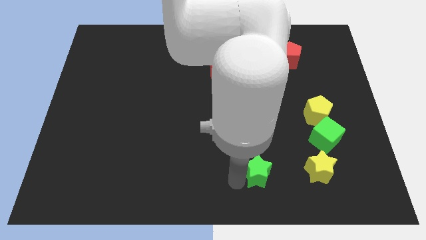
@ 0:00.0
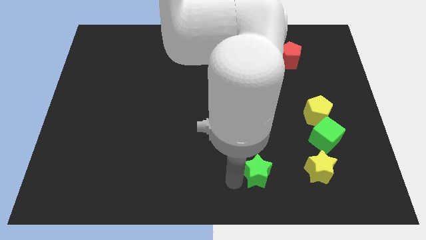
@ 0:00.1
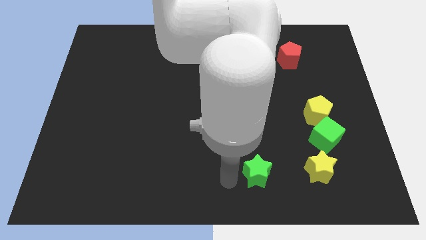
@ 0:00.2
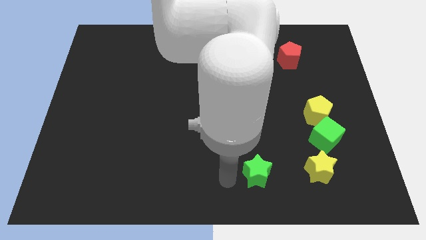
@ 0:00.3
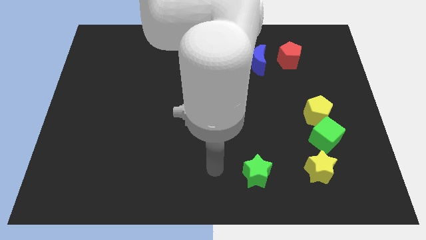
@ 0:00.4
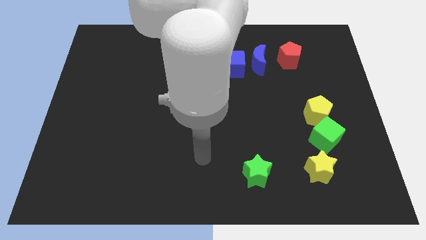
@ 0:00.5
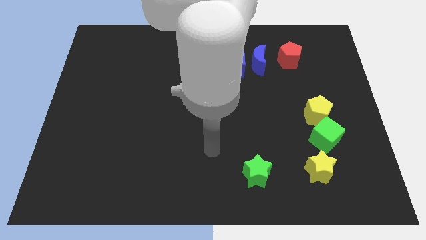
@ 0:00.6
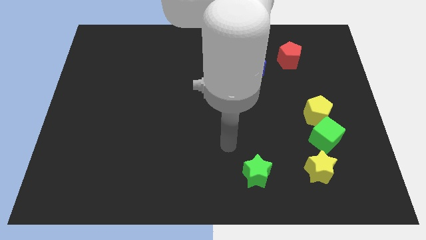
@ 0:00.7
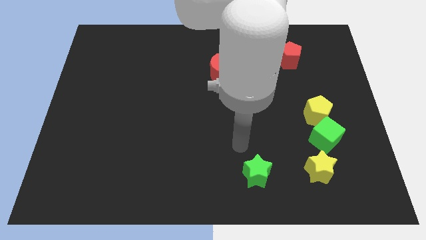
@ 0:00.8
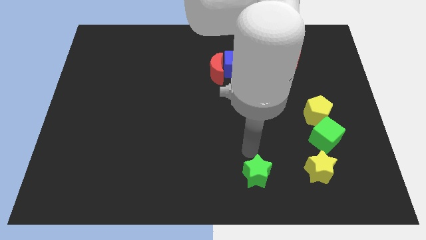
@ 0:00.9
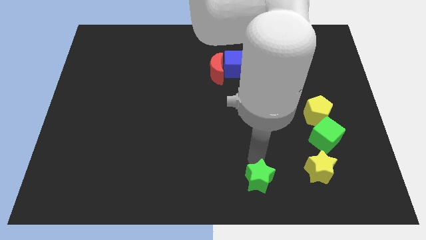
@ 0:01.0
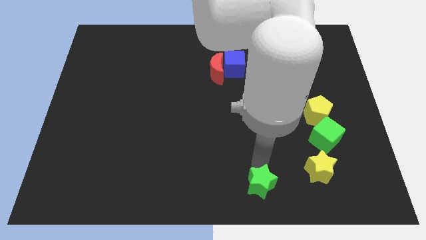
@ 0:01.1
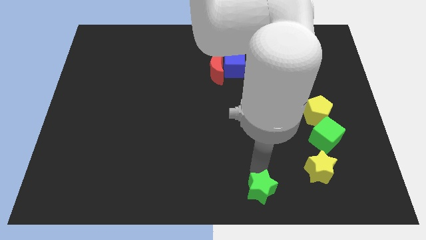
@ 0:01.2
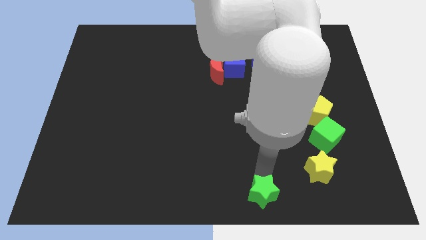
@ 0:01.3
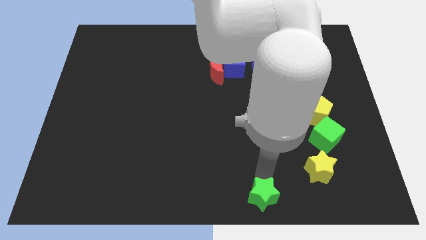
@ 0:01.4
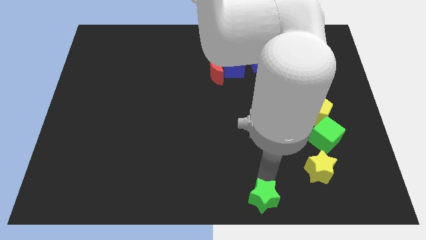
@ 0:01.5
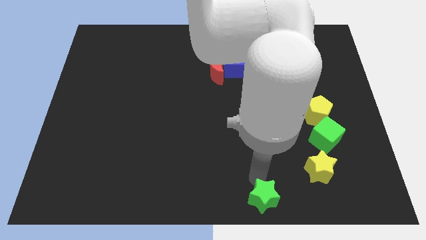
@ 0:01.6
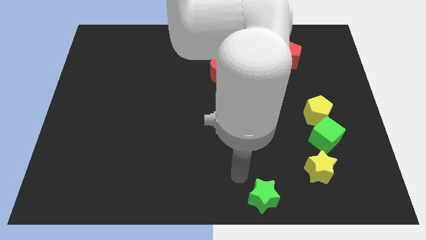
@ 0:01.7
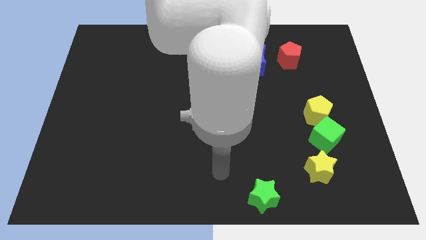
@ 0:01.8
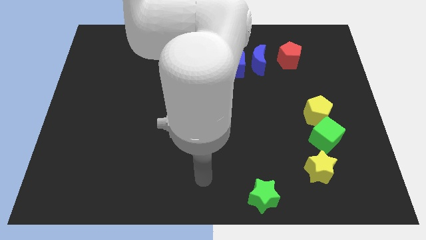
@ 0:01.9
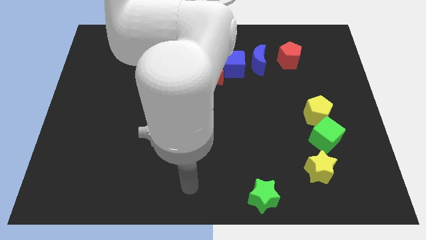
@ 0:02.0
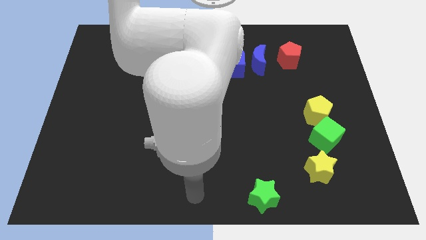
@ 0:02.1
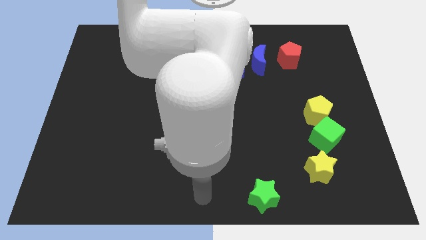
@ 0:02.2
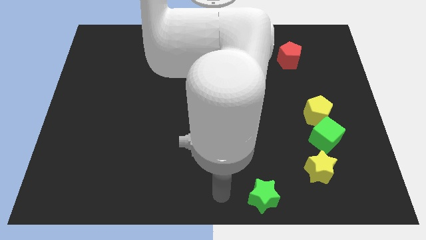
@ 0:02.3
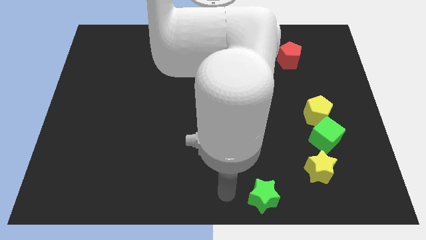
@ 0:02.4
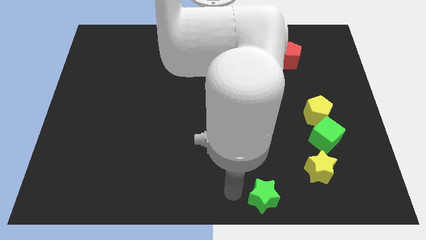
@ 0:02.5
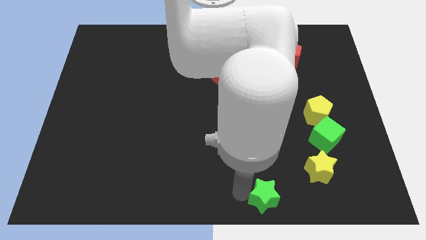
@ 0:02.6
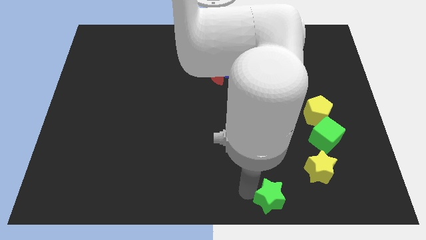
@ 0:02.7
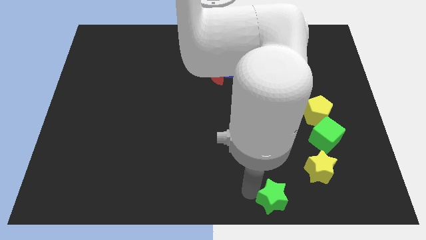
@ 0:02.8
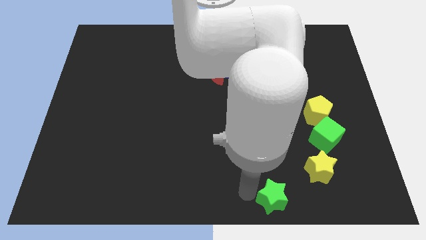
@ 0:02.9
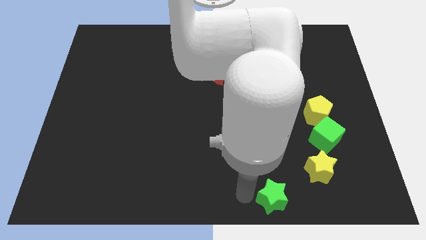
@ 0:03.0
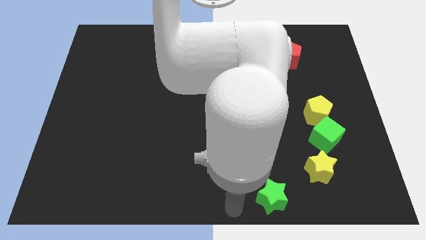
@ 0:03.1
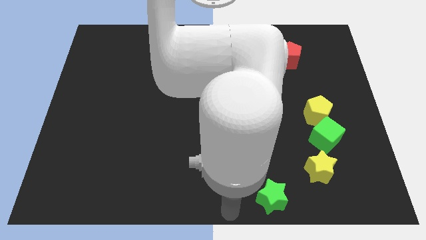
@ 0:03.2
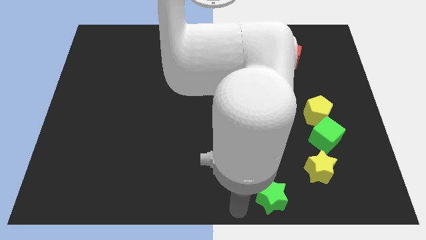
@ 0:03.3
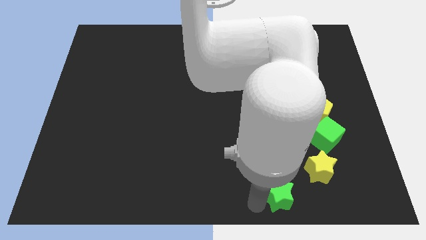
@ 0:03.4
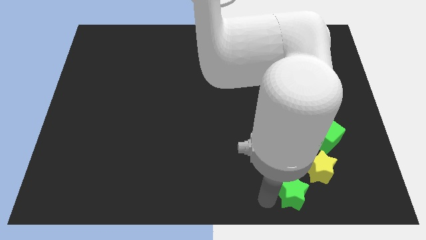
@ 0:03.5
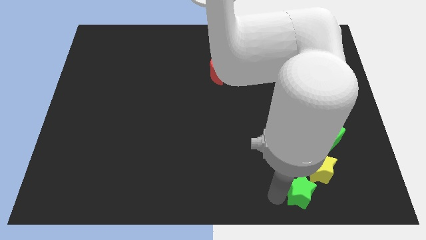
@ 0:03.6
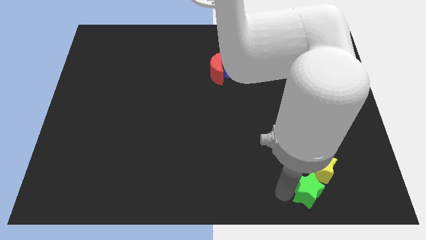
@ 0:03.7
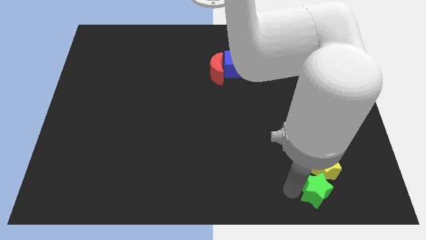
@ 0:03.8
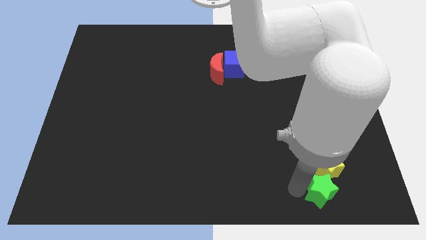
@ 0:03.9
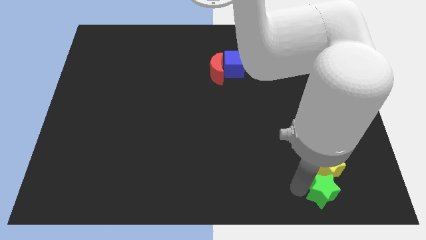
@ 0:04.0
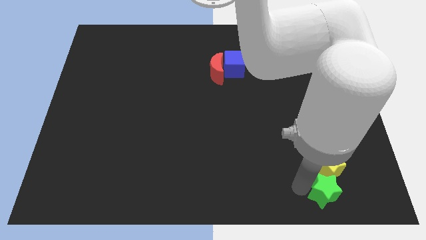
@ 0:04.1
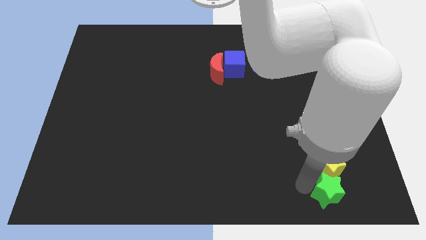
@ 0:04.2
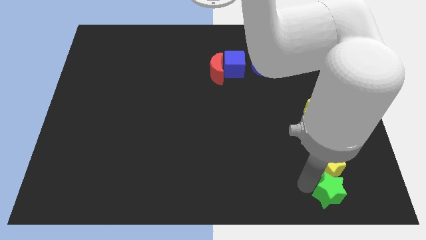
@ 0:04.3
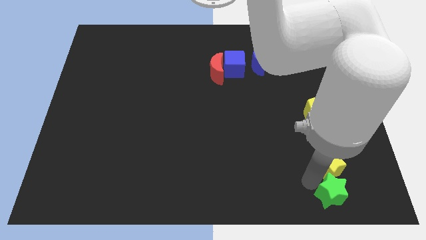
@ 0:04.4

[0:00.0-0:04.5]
bring the green star into the bottom side of the yellow star

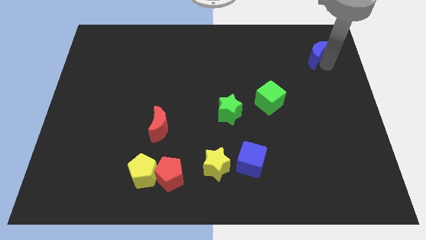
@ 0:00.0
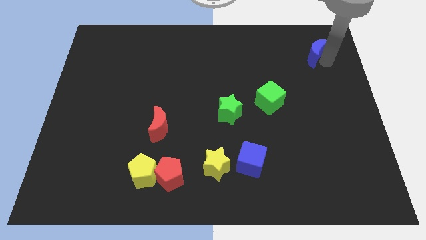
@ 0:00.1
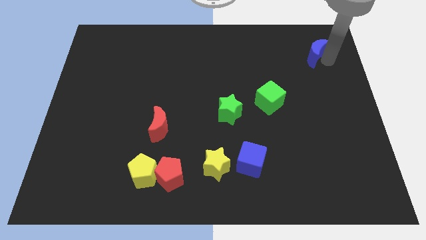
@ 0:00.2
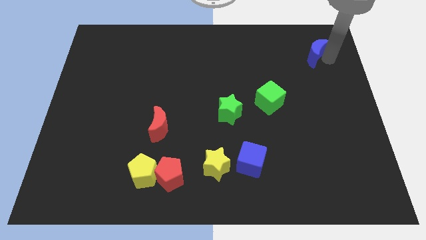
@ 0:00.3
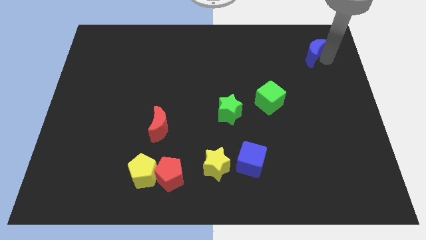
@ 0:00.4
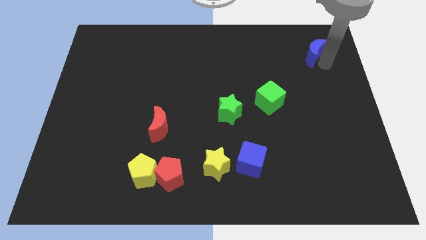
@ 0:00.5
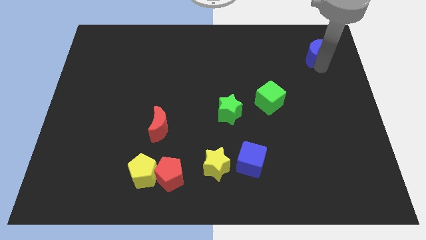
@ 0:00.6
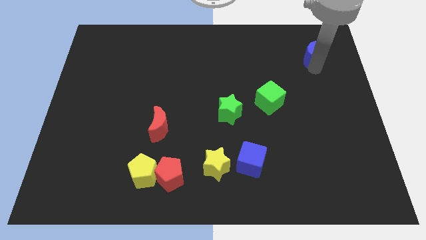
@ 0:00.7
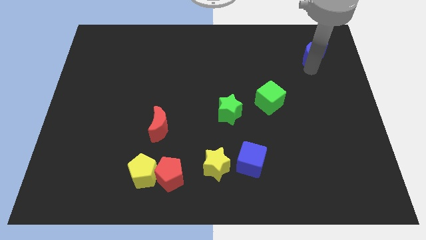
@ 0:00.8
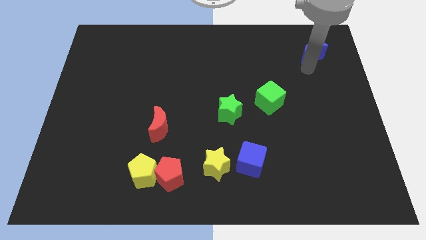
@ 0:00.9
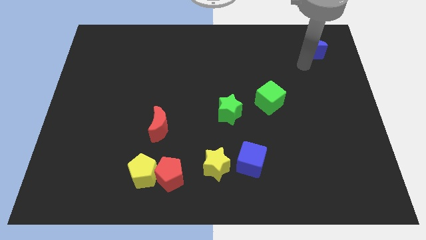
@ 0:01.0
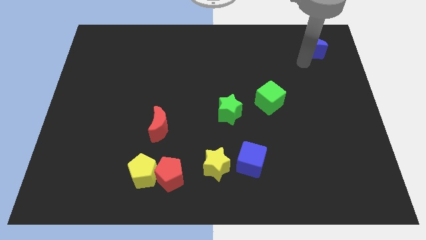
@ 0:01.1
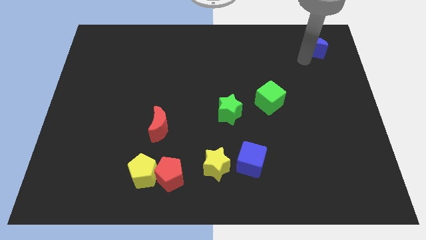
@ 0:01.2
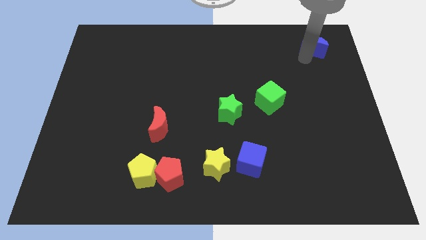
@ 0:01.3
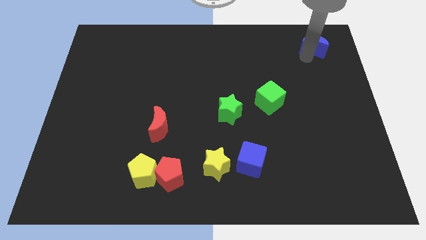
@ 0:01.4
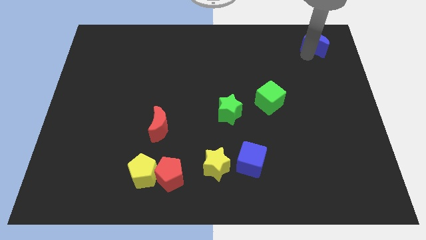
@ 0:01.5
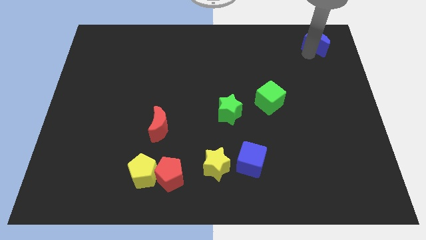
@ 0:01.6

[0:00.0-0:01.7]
move blue crescent towards top right corner

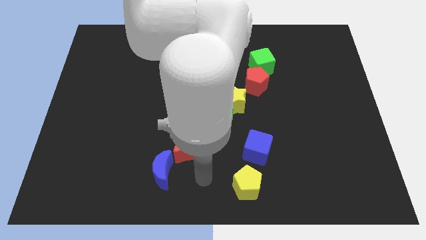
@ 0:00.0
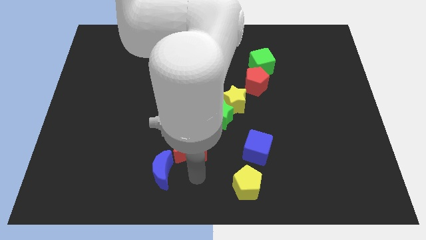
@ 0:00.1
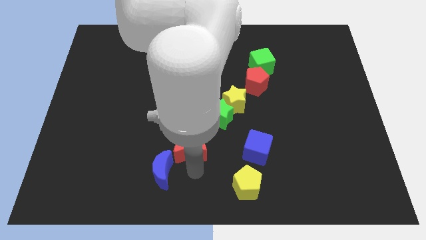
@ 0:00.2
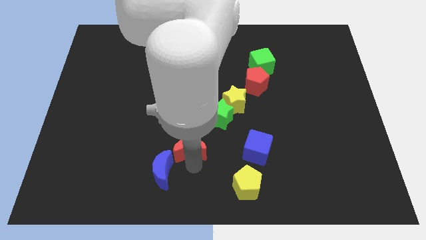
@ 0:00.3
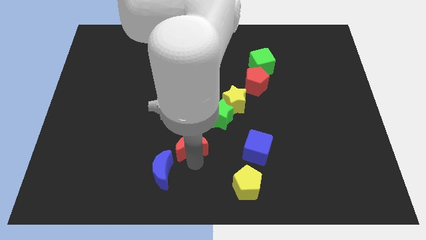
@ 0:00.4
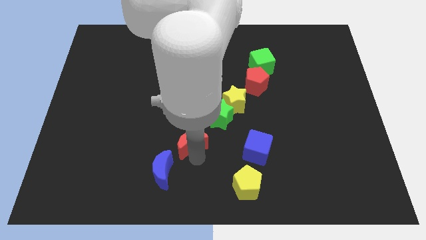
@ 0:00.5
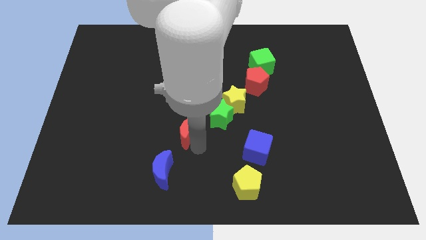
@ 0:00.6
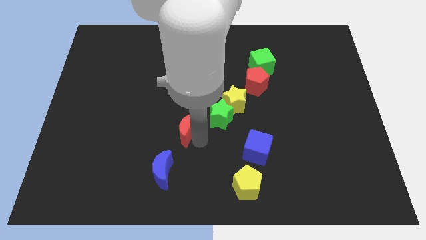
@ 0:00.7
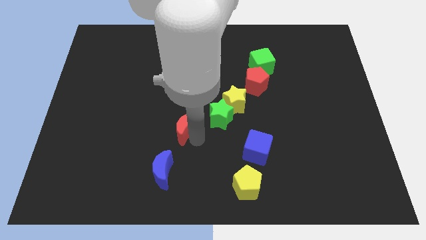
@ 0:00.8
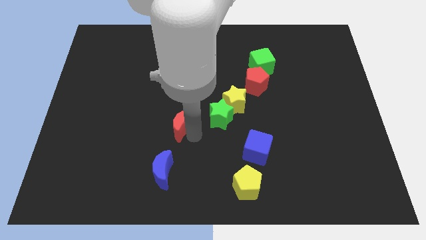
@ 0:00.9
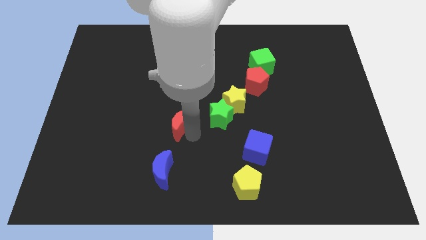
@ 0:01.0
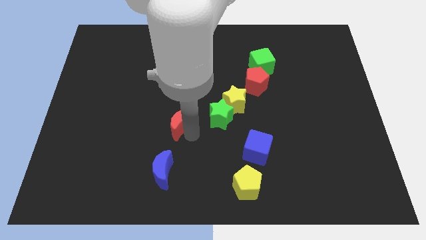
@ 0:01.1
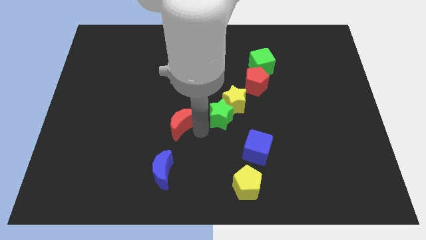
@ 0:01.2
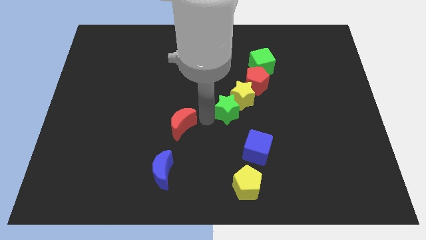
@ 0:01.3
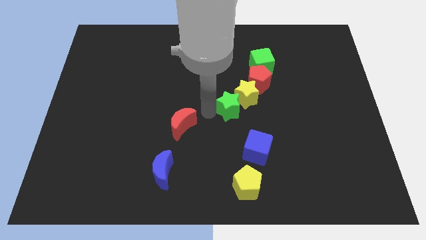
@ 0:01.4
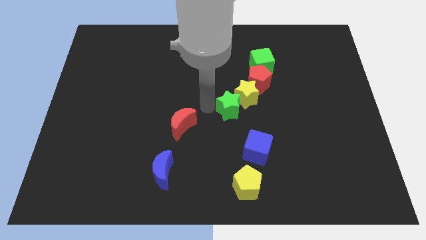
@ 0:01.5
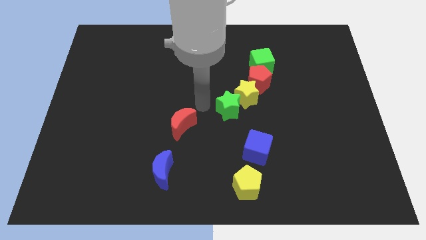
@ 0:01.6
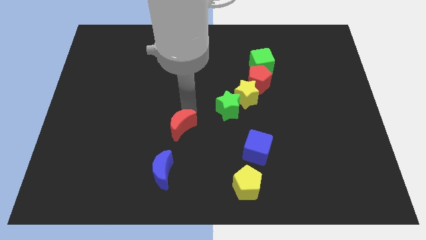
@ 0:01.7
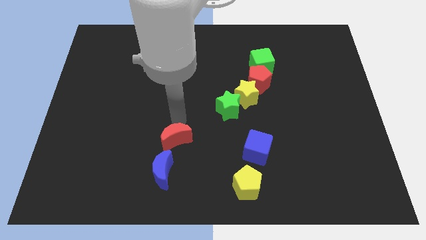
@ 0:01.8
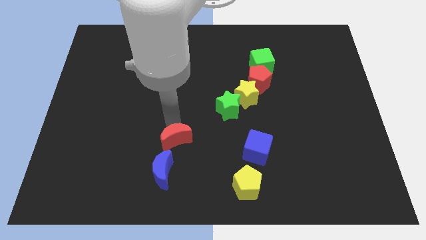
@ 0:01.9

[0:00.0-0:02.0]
move the red moon to the top side of the blue crescent

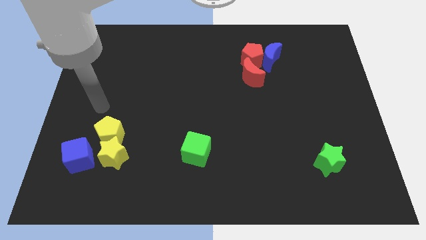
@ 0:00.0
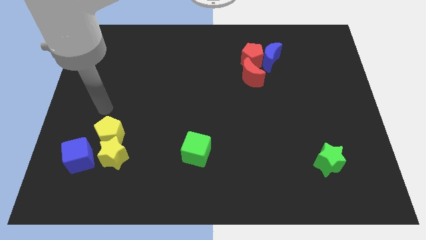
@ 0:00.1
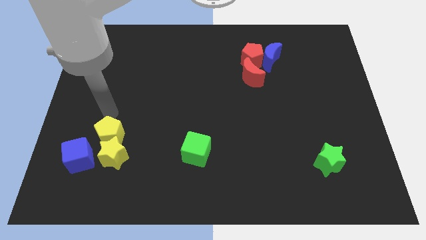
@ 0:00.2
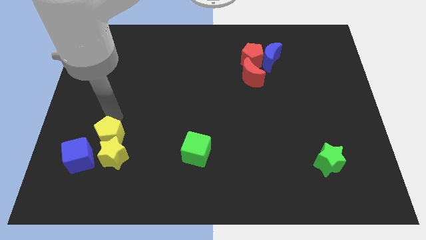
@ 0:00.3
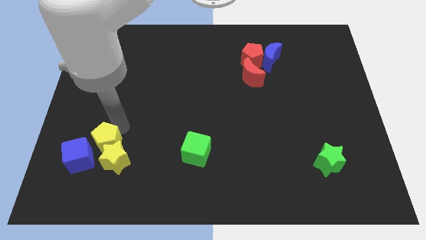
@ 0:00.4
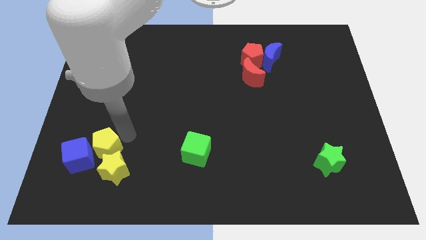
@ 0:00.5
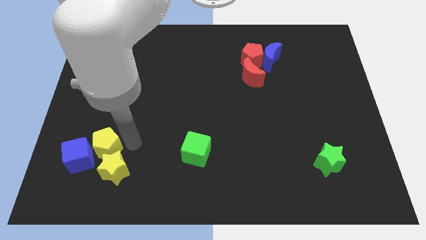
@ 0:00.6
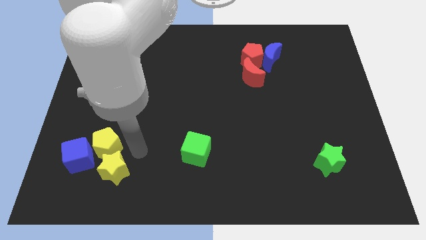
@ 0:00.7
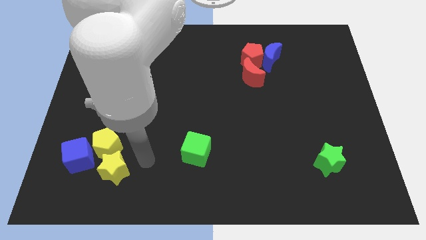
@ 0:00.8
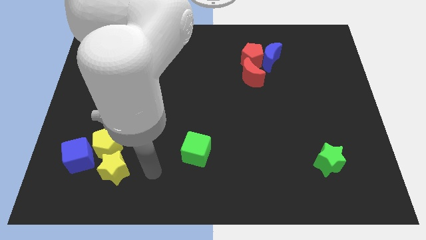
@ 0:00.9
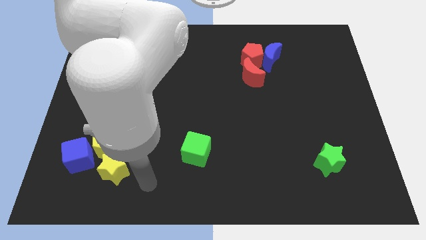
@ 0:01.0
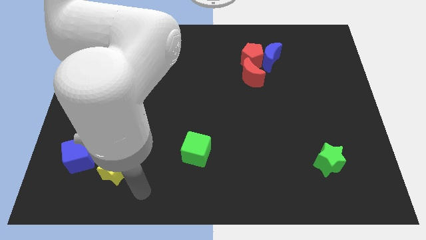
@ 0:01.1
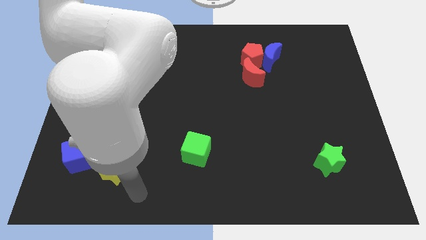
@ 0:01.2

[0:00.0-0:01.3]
slightly push the yellow pentagon to the right of the blue cube
